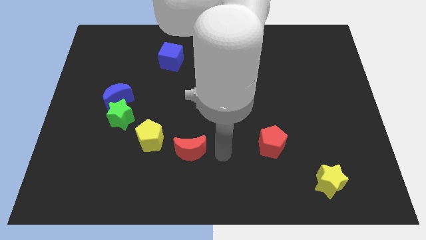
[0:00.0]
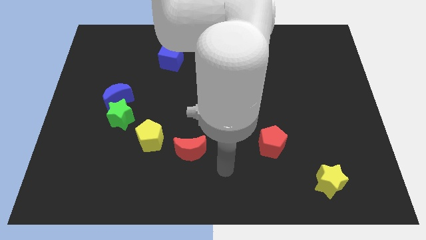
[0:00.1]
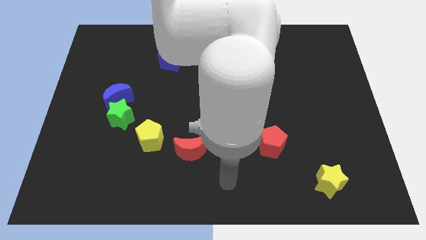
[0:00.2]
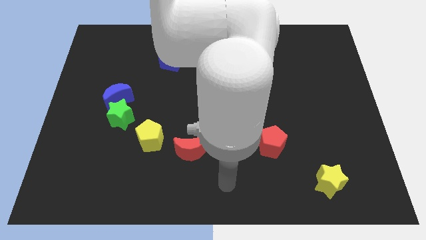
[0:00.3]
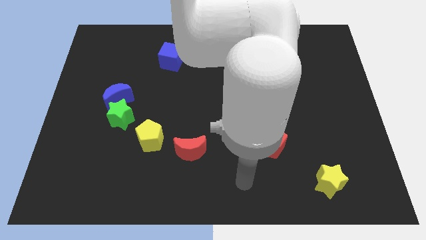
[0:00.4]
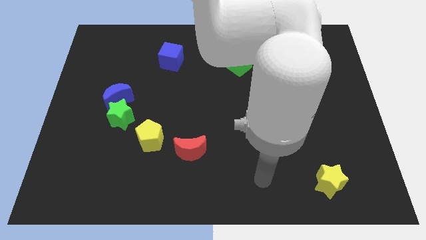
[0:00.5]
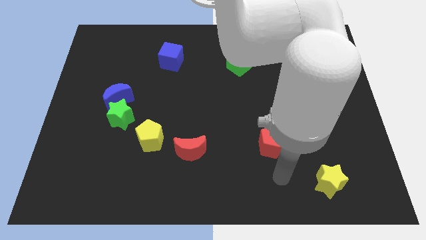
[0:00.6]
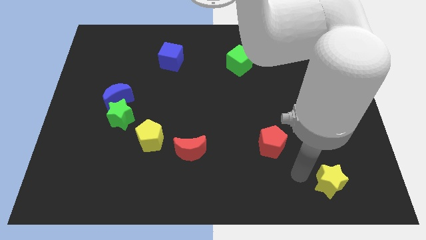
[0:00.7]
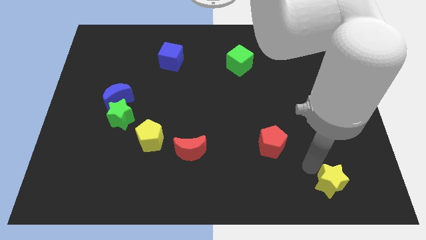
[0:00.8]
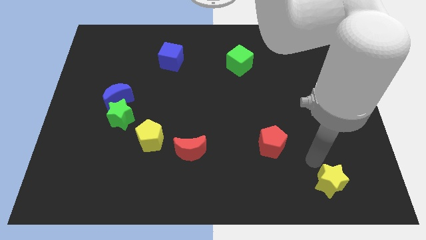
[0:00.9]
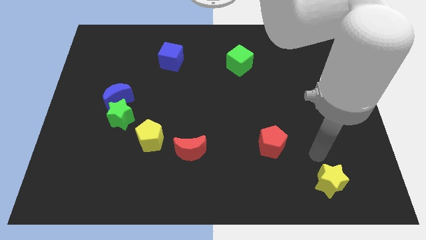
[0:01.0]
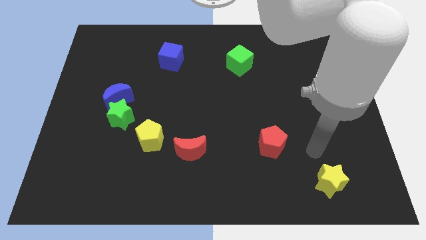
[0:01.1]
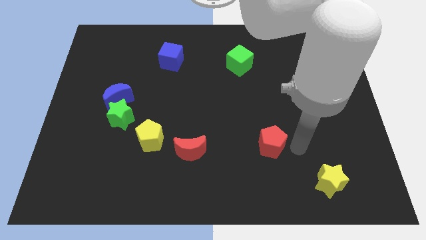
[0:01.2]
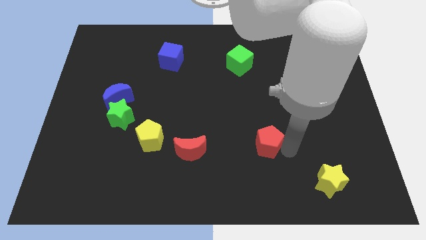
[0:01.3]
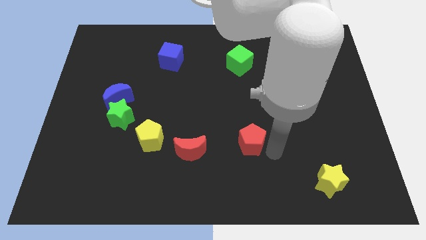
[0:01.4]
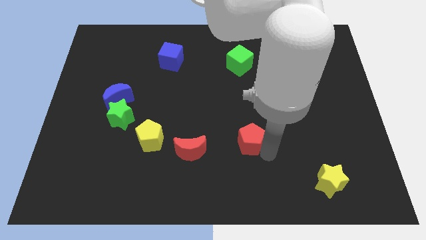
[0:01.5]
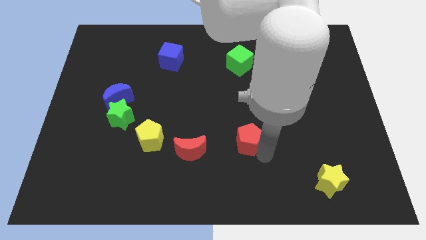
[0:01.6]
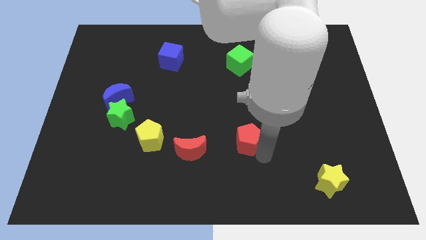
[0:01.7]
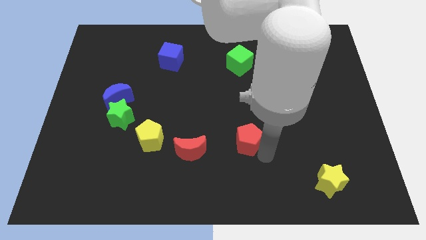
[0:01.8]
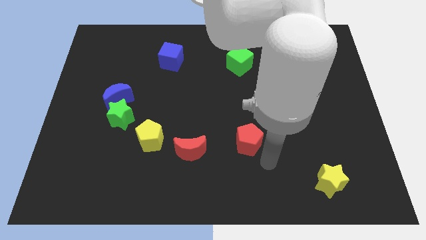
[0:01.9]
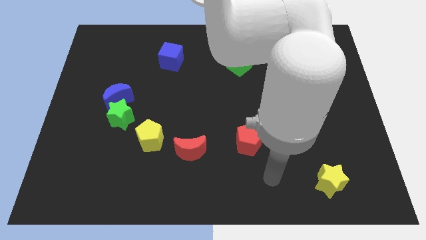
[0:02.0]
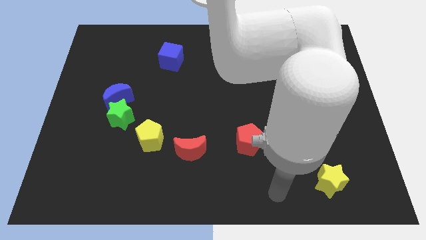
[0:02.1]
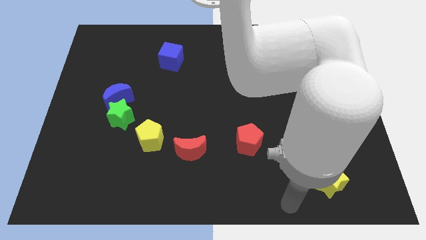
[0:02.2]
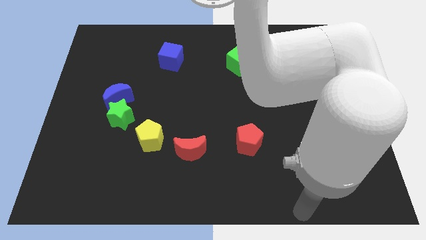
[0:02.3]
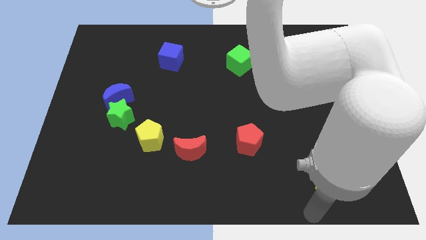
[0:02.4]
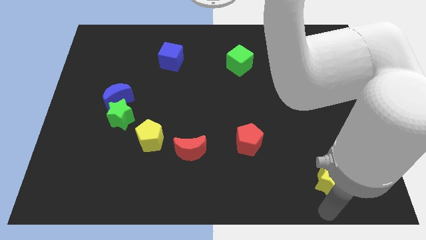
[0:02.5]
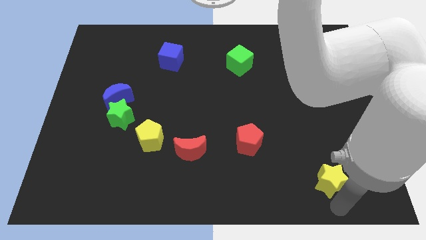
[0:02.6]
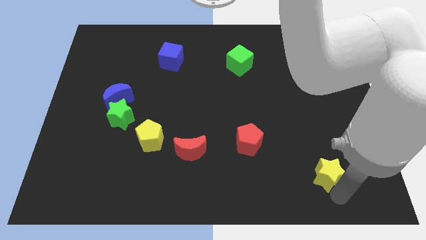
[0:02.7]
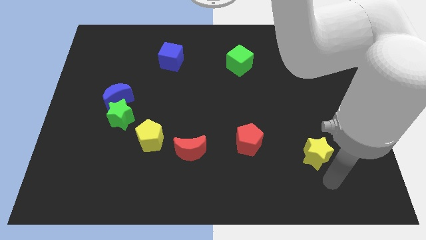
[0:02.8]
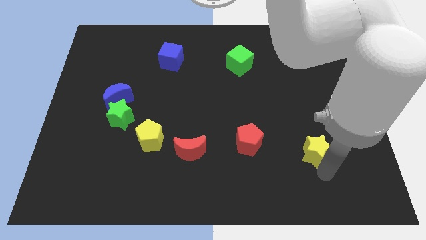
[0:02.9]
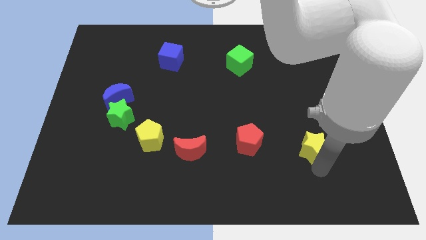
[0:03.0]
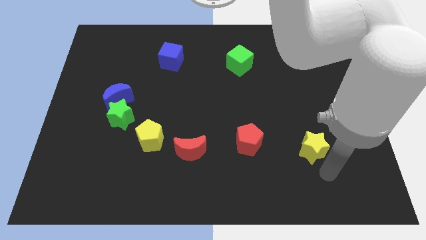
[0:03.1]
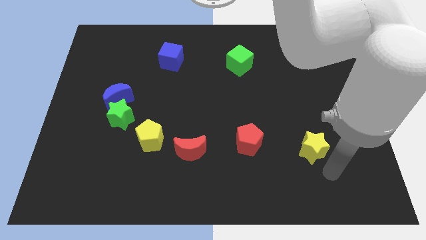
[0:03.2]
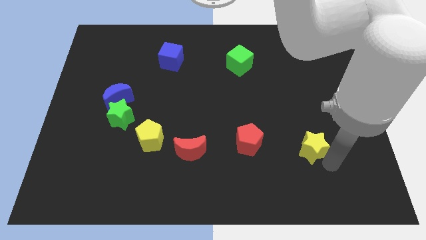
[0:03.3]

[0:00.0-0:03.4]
push red pentagon along with yellow star in a horizontal line

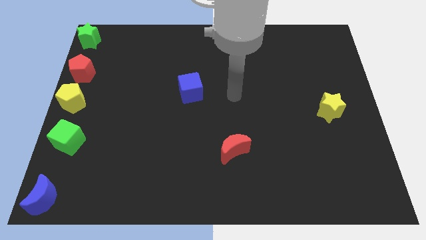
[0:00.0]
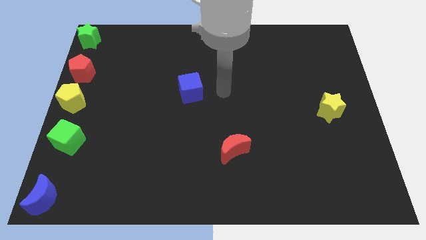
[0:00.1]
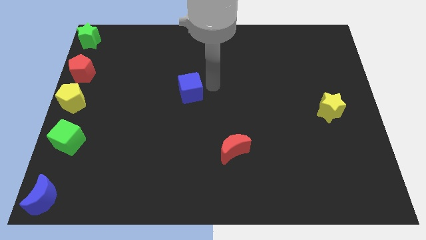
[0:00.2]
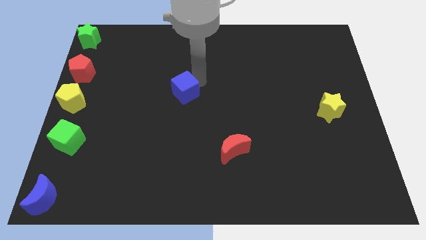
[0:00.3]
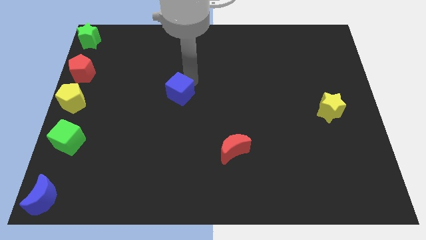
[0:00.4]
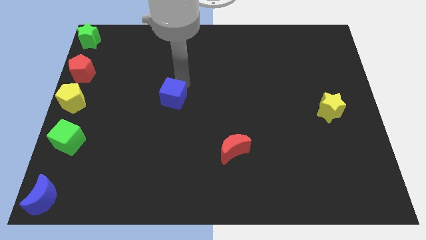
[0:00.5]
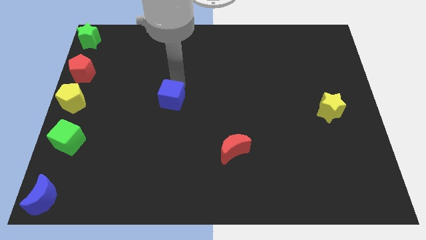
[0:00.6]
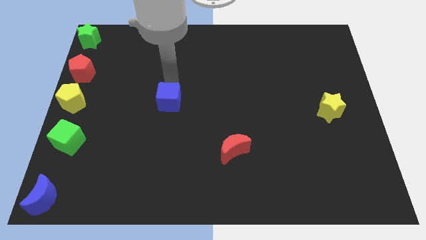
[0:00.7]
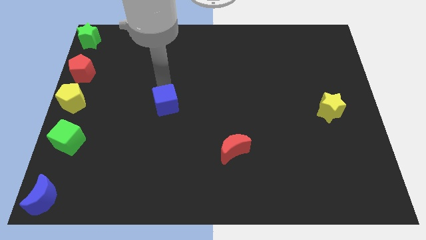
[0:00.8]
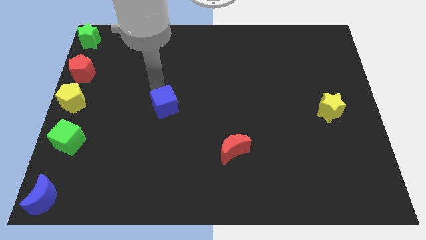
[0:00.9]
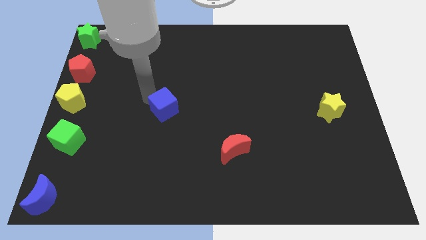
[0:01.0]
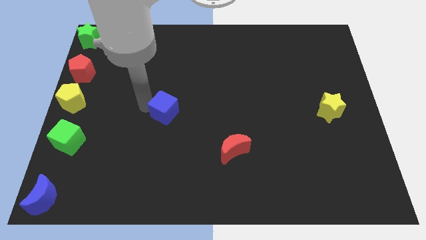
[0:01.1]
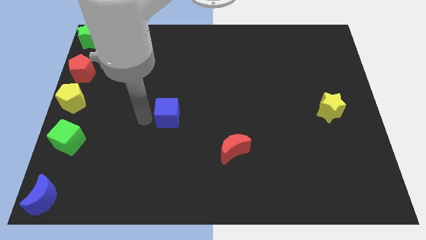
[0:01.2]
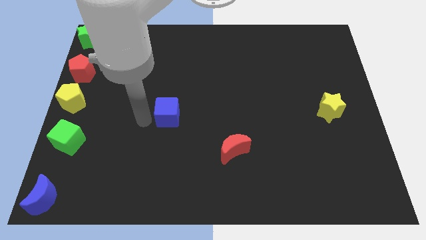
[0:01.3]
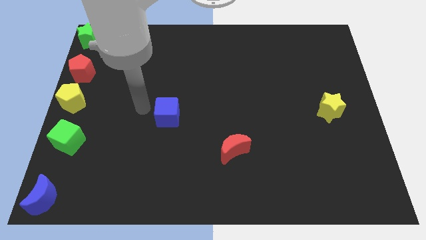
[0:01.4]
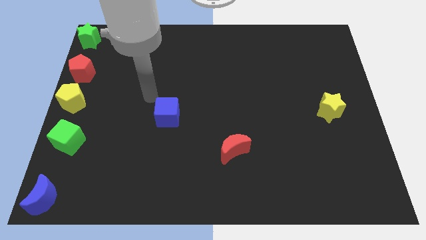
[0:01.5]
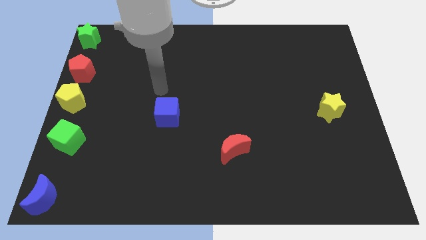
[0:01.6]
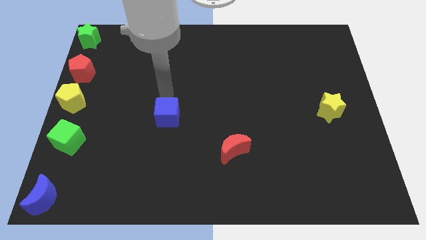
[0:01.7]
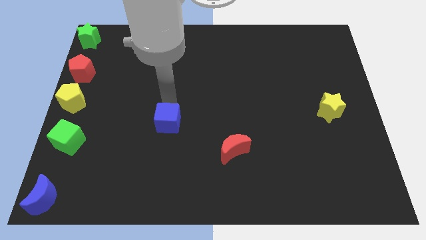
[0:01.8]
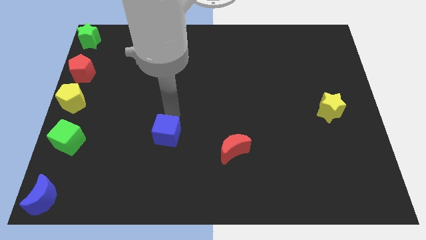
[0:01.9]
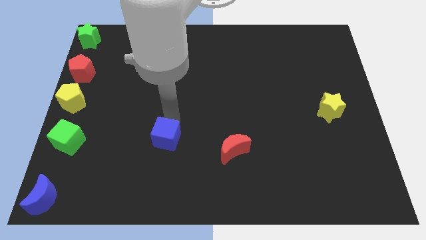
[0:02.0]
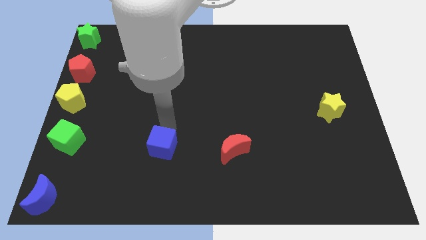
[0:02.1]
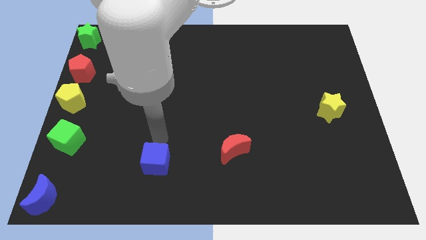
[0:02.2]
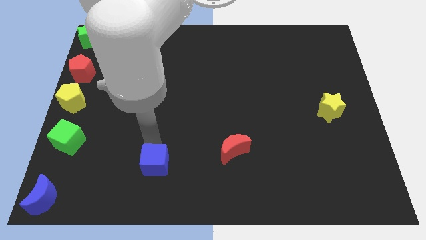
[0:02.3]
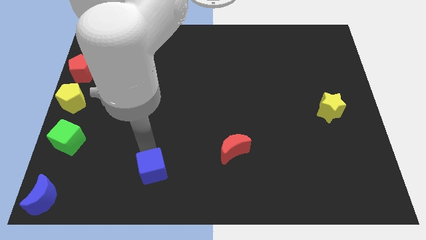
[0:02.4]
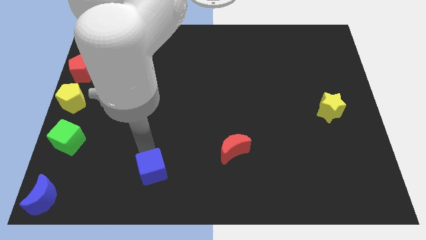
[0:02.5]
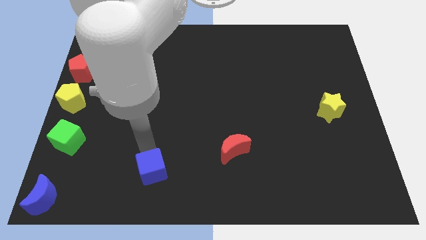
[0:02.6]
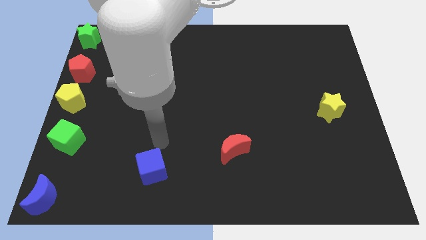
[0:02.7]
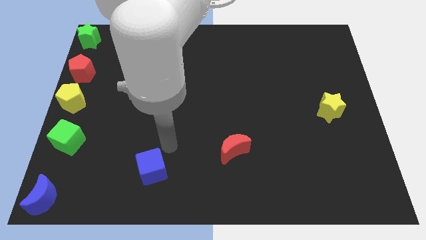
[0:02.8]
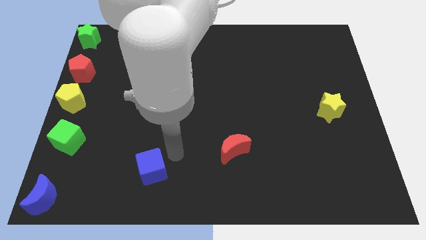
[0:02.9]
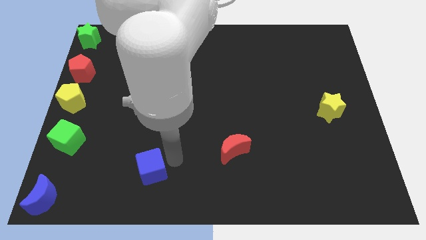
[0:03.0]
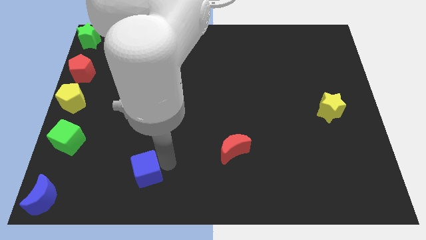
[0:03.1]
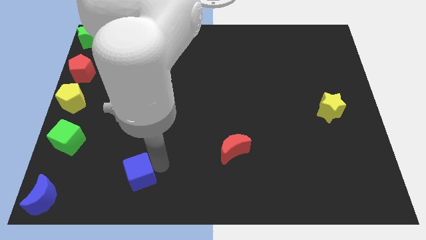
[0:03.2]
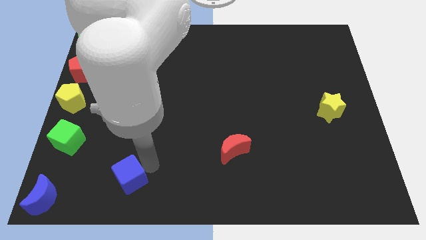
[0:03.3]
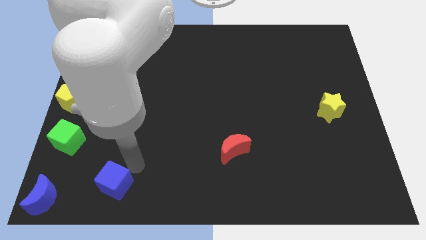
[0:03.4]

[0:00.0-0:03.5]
push the blue cube towards the bottom left side of the board

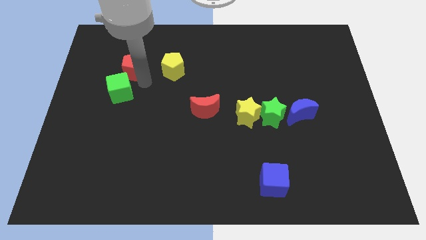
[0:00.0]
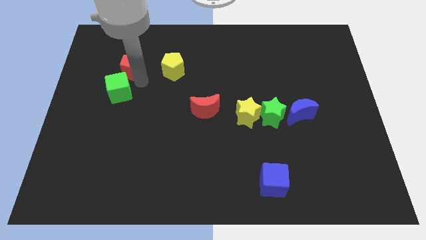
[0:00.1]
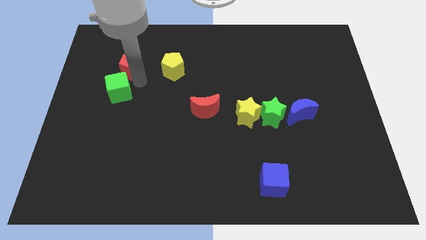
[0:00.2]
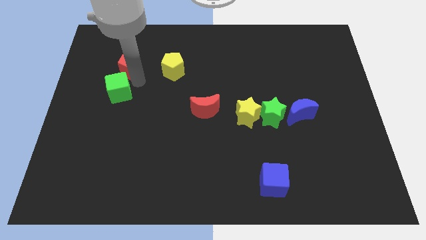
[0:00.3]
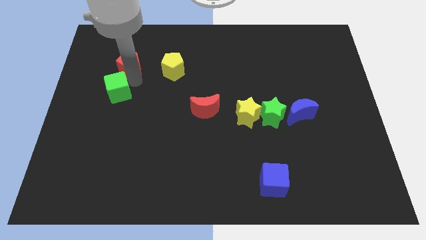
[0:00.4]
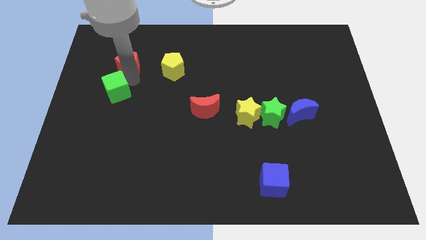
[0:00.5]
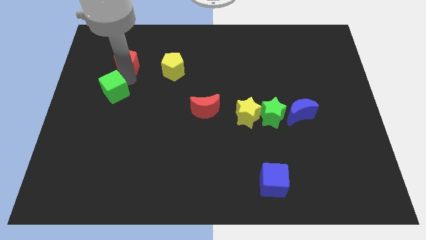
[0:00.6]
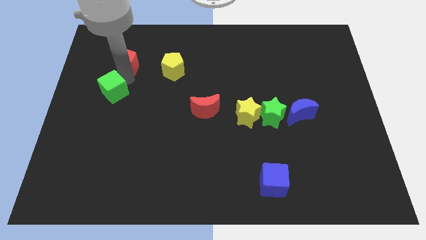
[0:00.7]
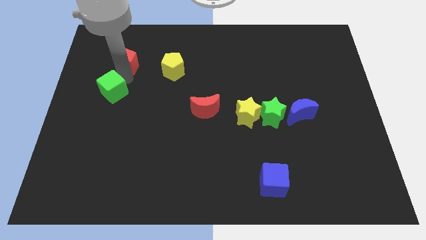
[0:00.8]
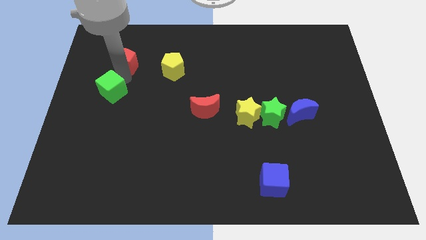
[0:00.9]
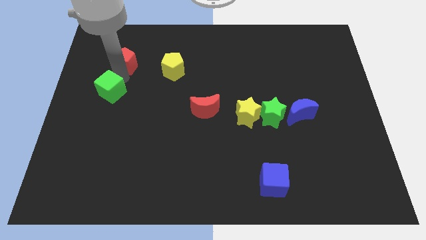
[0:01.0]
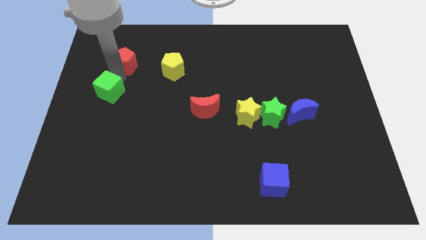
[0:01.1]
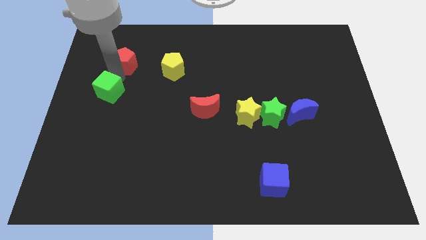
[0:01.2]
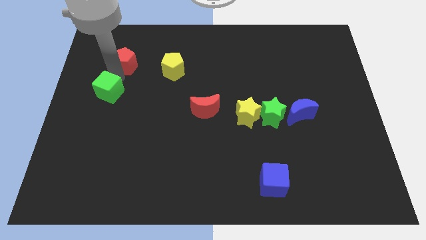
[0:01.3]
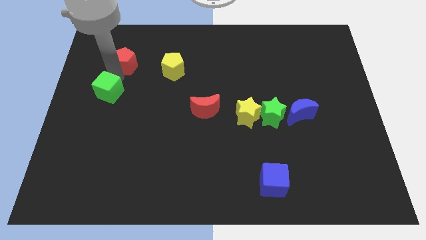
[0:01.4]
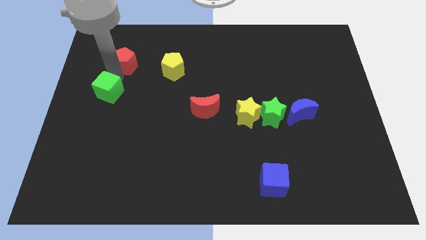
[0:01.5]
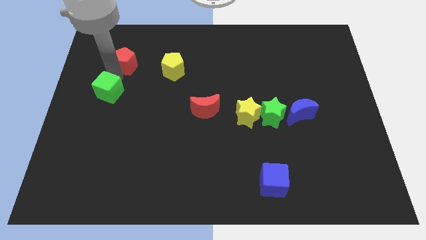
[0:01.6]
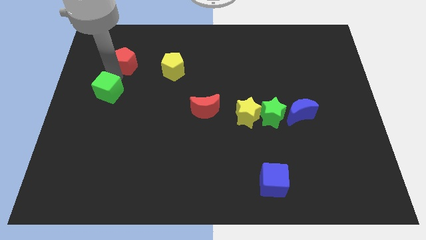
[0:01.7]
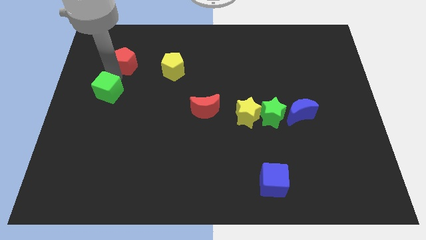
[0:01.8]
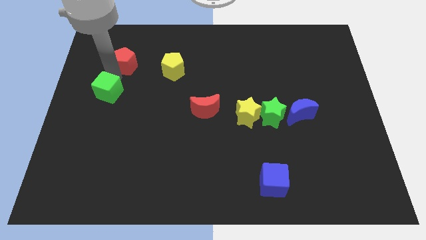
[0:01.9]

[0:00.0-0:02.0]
separate the green cube from the red pentagon

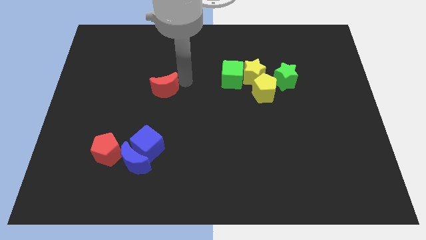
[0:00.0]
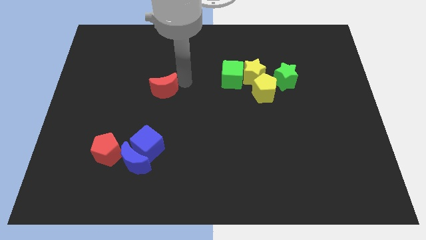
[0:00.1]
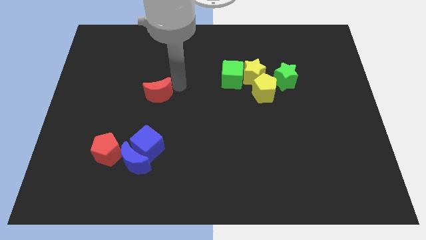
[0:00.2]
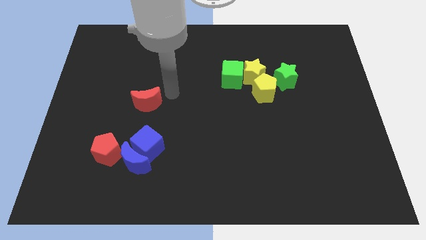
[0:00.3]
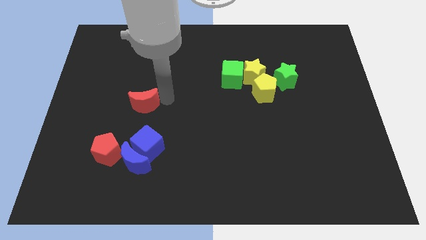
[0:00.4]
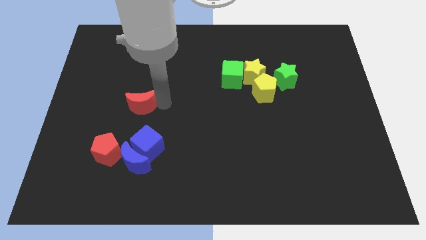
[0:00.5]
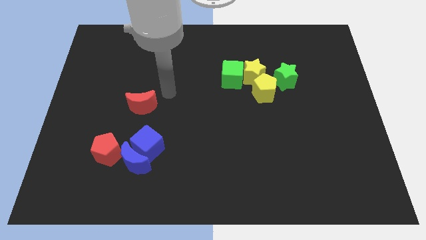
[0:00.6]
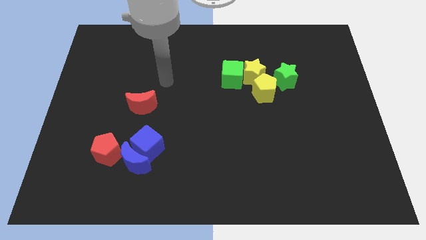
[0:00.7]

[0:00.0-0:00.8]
place red crescent above blue cube
